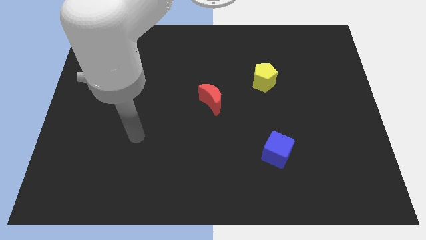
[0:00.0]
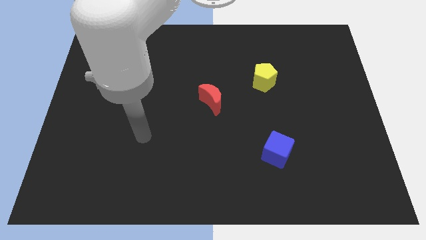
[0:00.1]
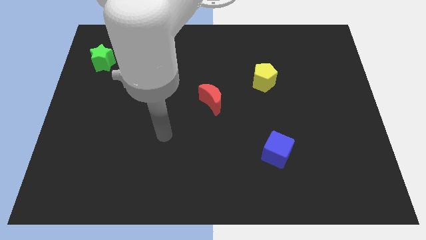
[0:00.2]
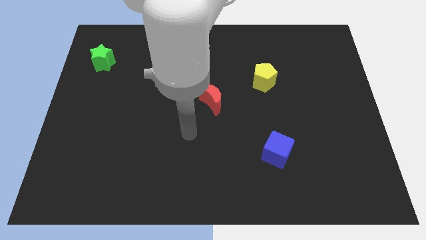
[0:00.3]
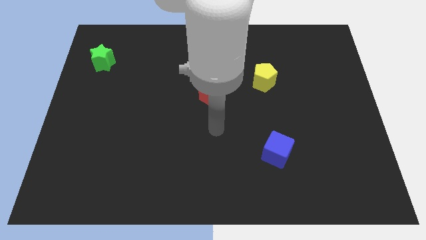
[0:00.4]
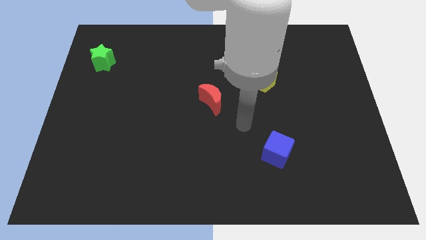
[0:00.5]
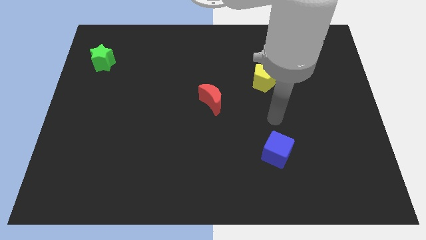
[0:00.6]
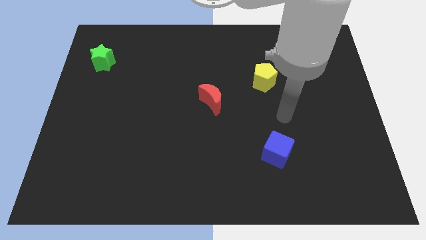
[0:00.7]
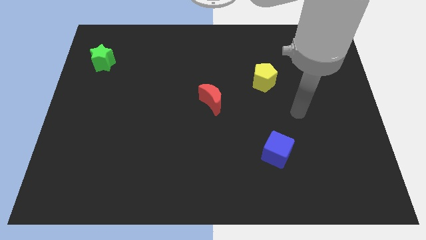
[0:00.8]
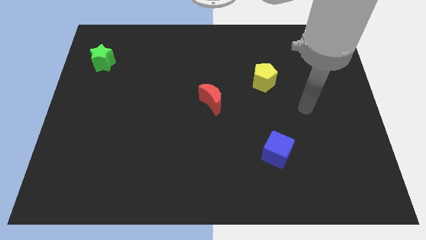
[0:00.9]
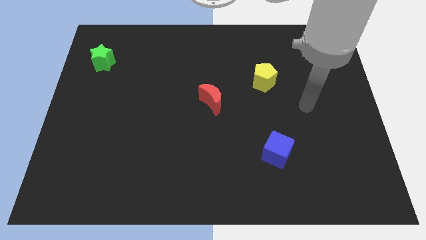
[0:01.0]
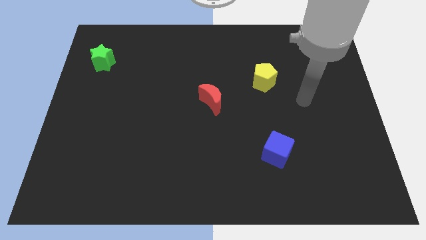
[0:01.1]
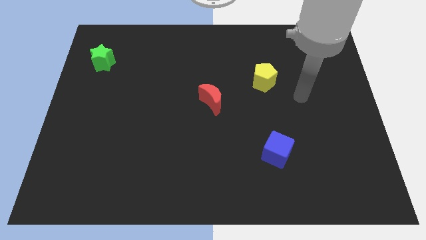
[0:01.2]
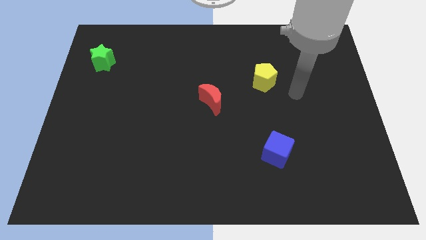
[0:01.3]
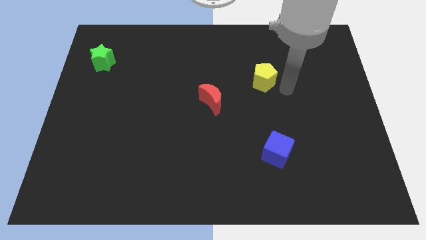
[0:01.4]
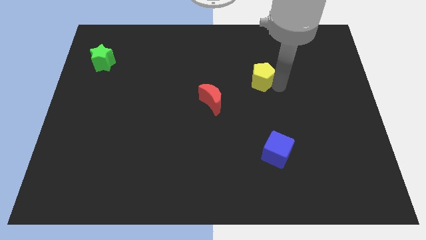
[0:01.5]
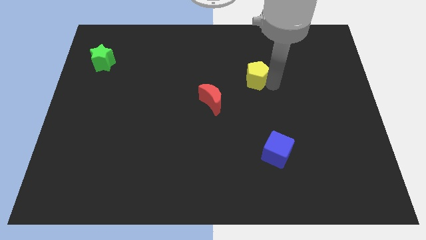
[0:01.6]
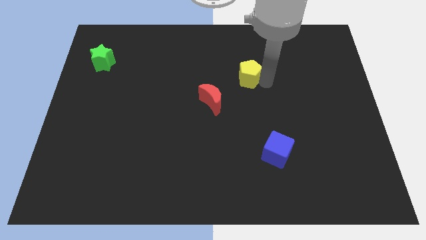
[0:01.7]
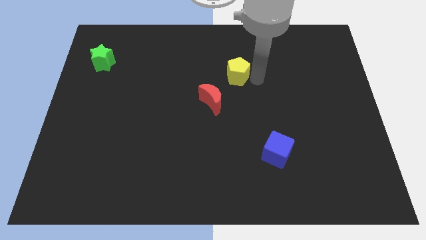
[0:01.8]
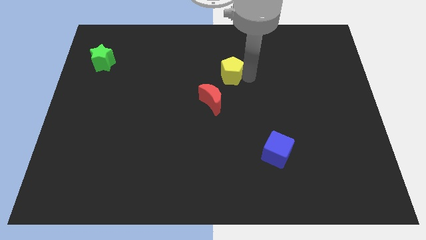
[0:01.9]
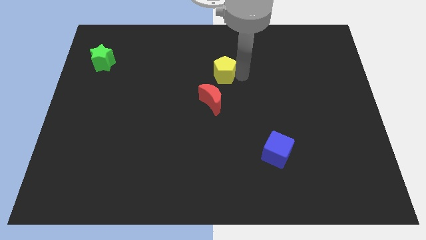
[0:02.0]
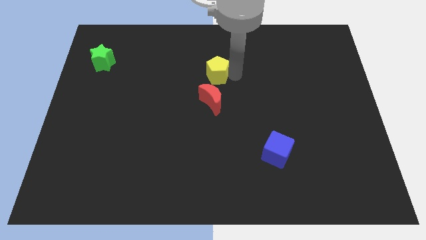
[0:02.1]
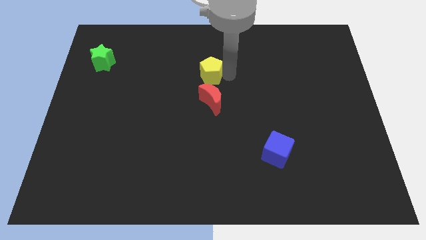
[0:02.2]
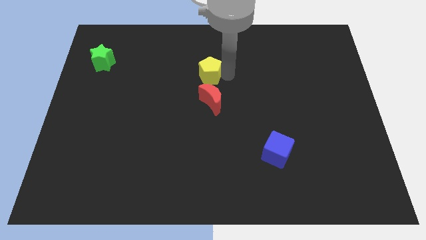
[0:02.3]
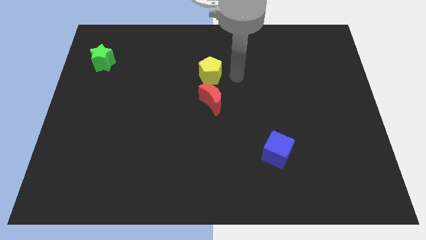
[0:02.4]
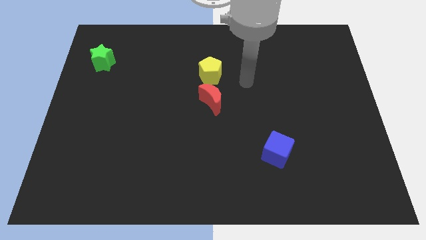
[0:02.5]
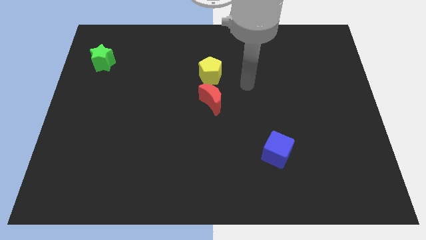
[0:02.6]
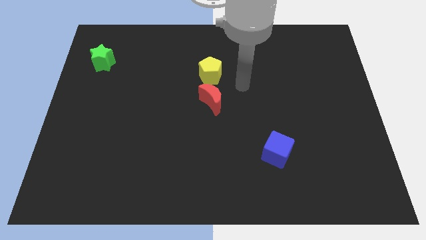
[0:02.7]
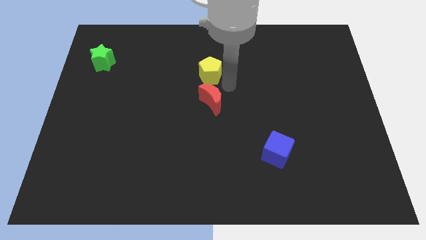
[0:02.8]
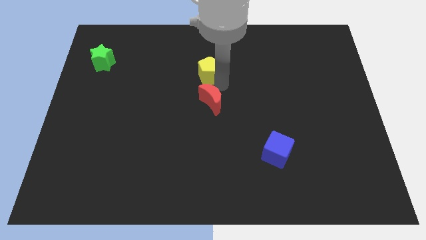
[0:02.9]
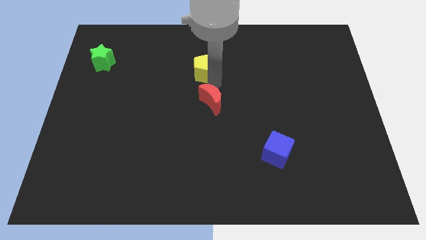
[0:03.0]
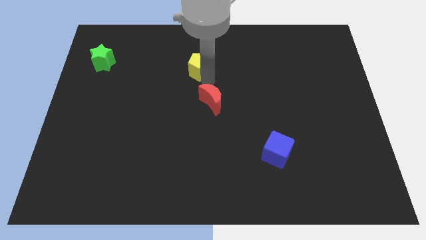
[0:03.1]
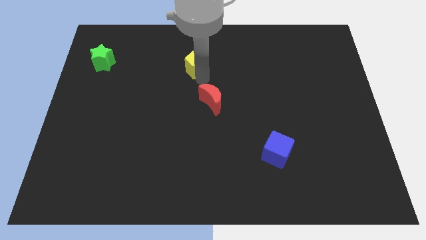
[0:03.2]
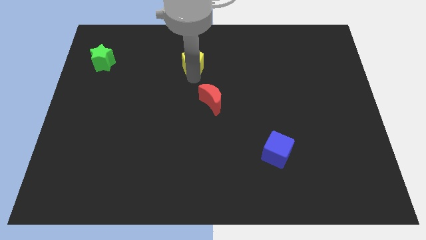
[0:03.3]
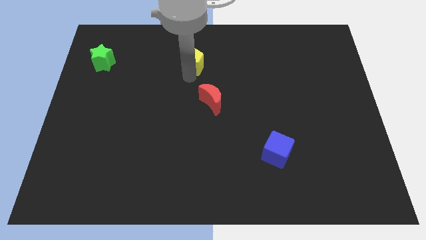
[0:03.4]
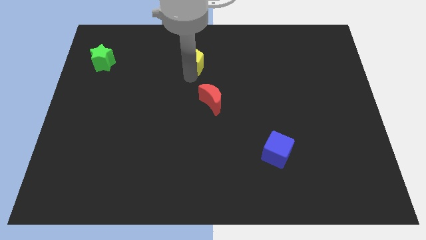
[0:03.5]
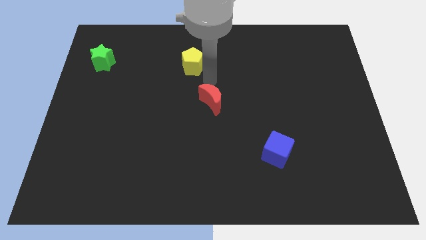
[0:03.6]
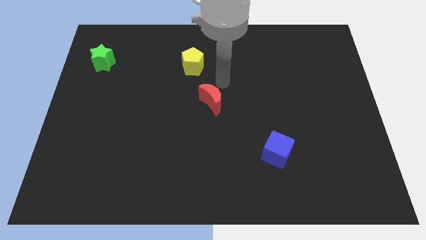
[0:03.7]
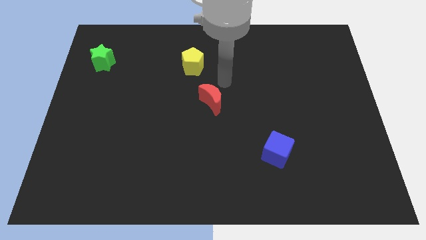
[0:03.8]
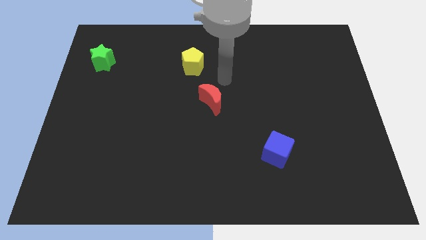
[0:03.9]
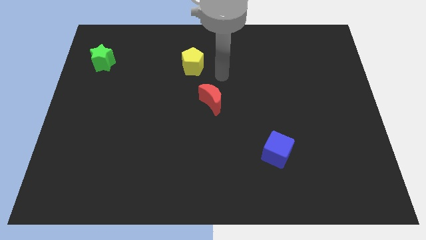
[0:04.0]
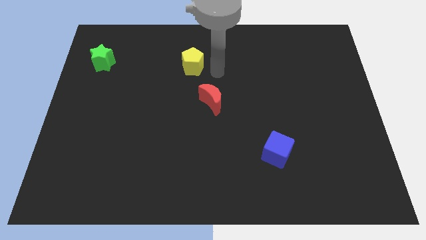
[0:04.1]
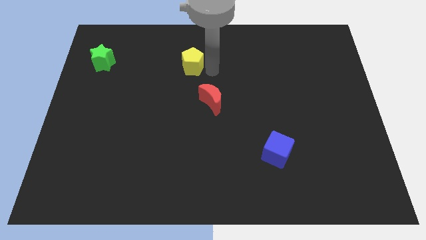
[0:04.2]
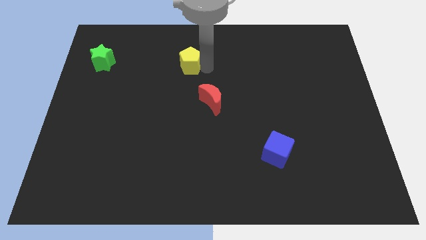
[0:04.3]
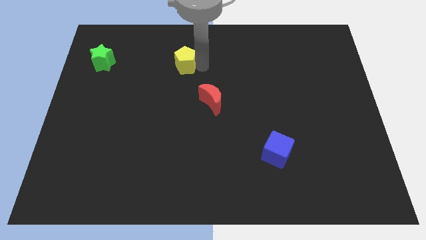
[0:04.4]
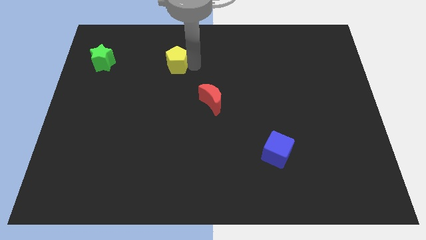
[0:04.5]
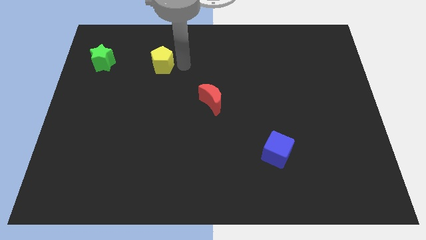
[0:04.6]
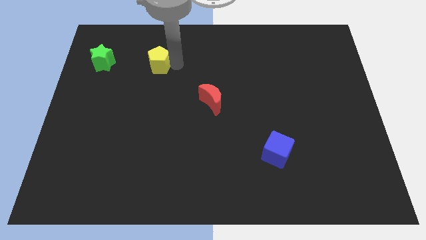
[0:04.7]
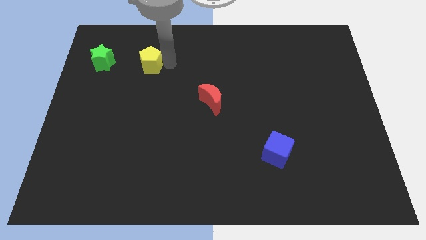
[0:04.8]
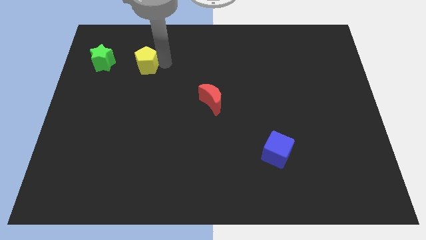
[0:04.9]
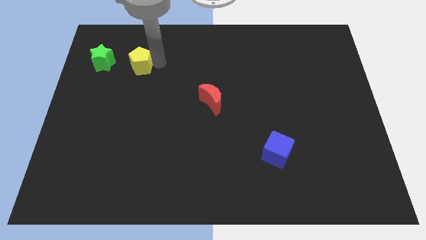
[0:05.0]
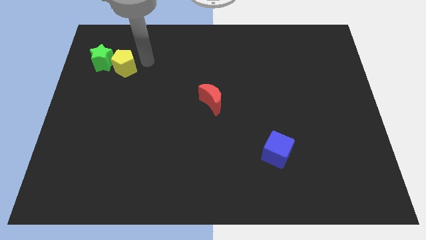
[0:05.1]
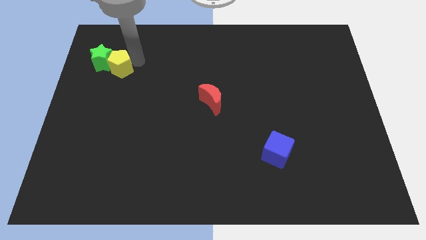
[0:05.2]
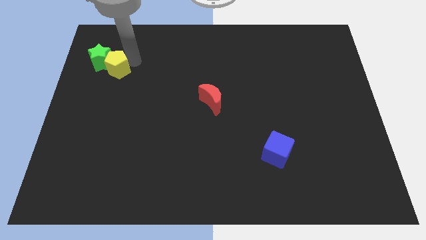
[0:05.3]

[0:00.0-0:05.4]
push the yellow block to the star

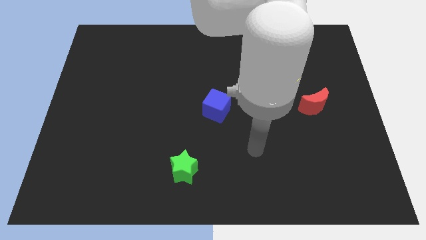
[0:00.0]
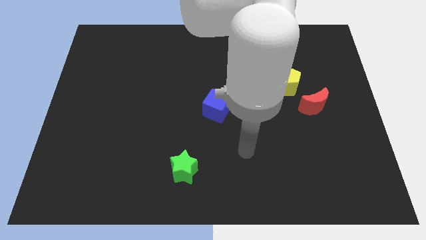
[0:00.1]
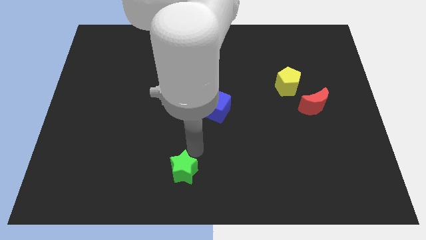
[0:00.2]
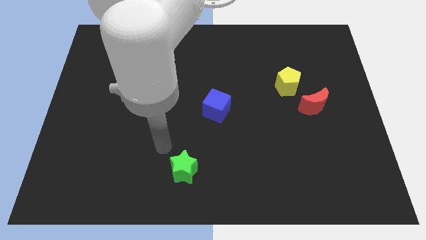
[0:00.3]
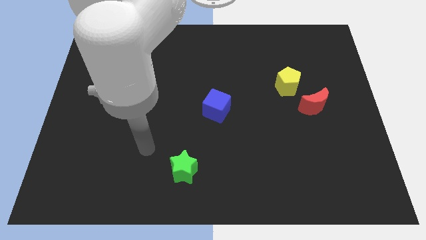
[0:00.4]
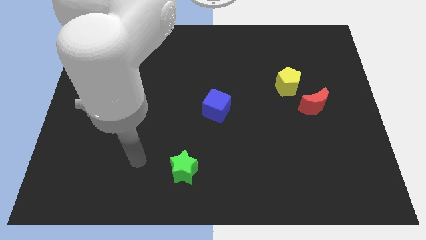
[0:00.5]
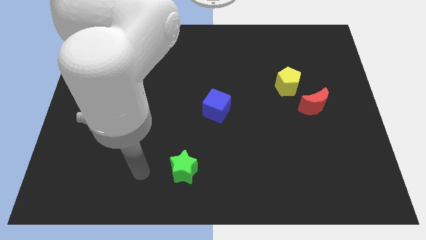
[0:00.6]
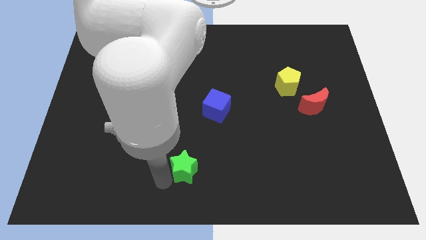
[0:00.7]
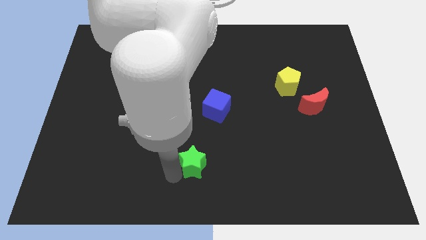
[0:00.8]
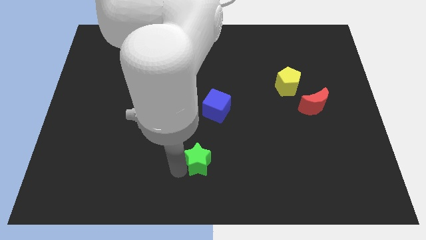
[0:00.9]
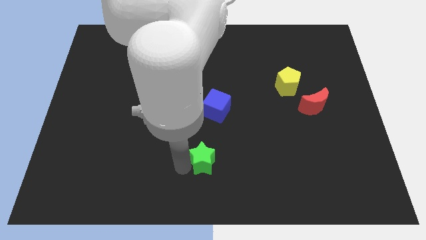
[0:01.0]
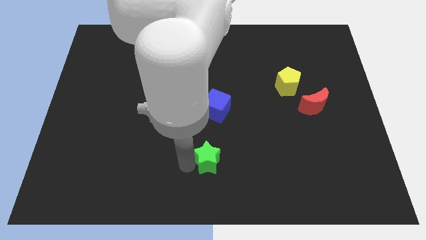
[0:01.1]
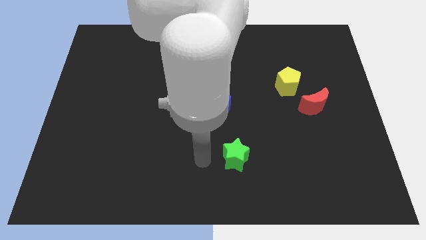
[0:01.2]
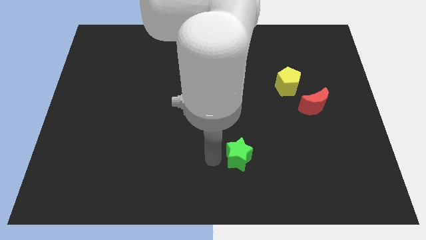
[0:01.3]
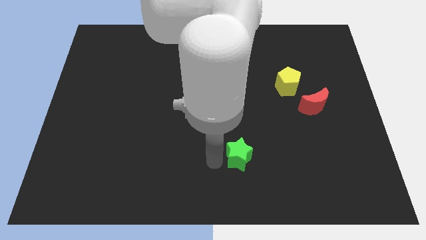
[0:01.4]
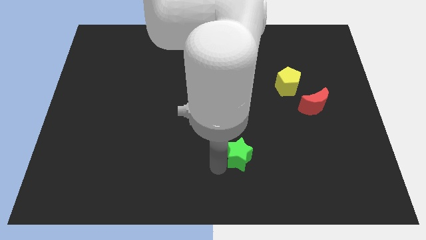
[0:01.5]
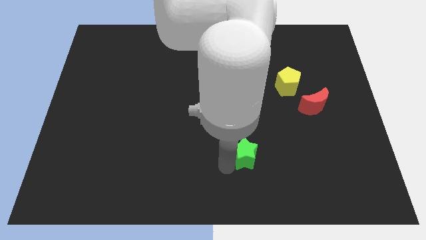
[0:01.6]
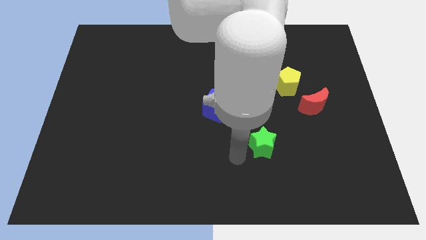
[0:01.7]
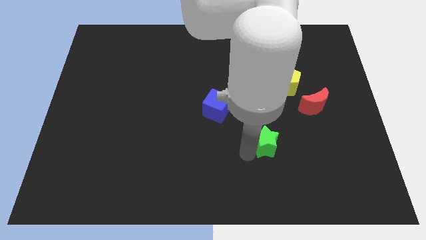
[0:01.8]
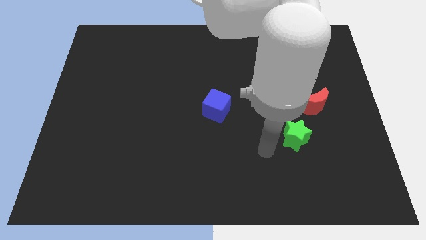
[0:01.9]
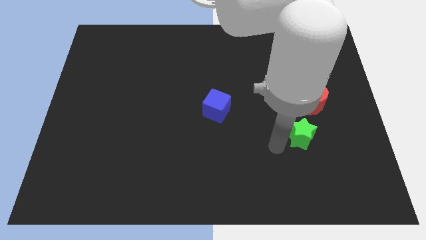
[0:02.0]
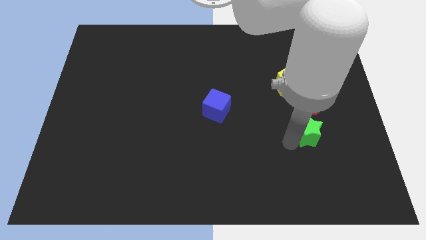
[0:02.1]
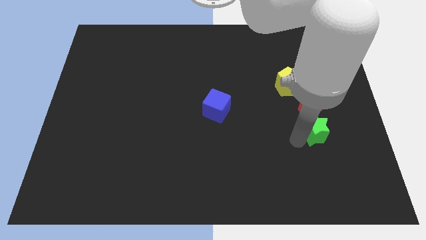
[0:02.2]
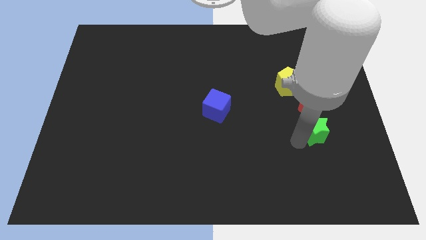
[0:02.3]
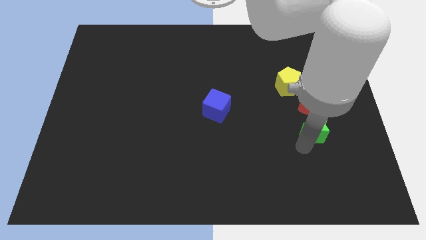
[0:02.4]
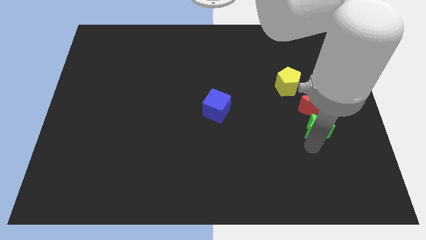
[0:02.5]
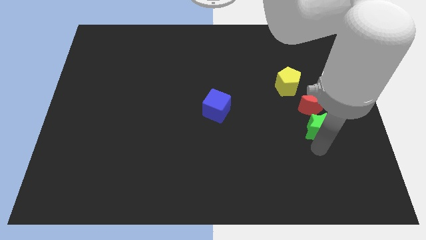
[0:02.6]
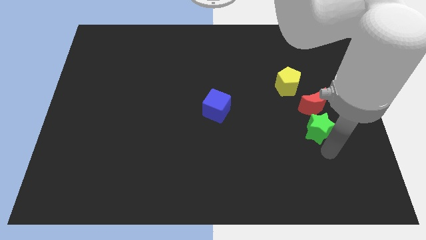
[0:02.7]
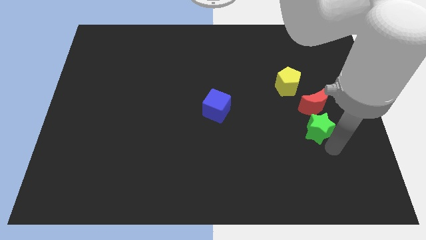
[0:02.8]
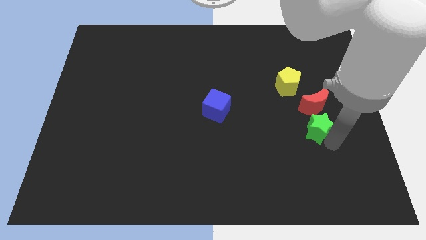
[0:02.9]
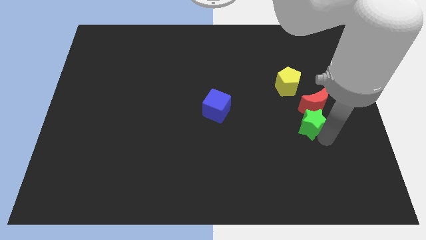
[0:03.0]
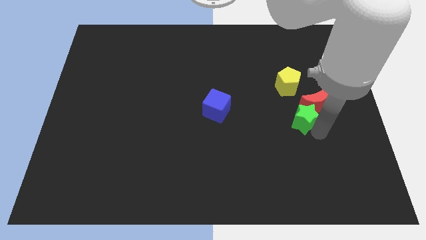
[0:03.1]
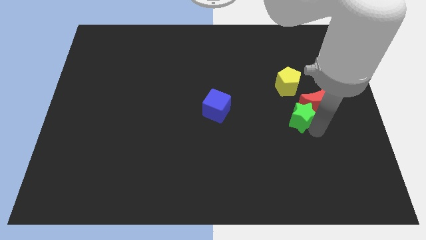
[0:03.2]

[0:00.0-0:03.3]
put the green star close to the moon
